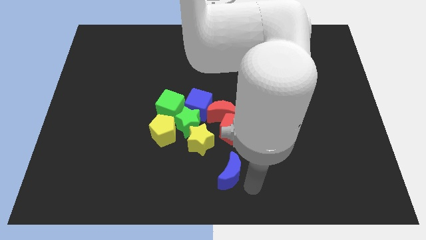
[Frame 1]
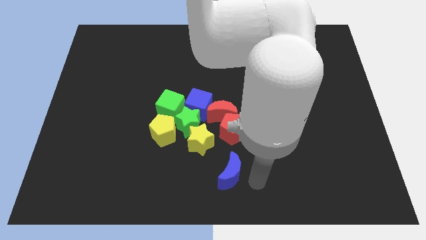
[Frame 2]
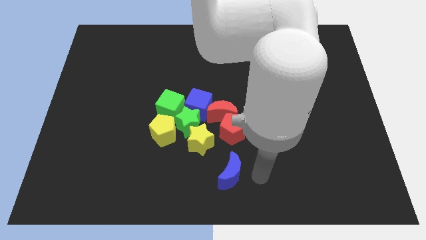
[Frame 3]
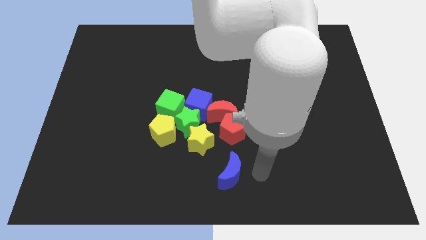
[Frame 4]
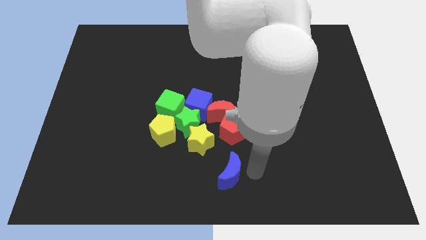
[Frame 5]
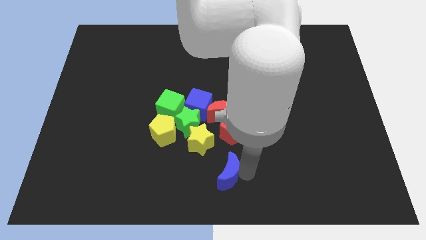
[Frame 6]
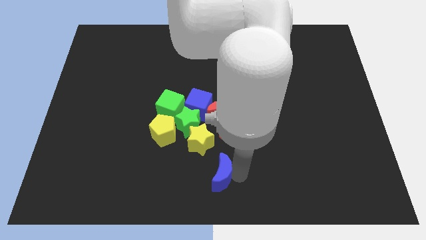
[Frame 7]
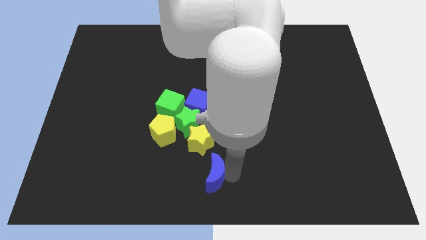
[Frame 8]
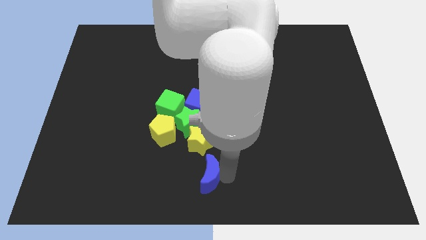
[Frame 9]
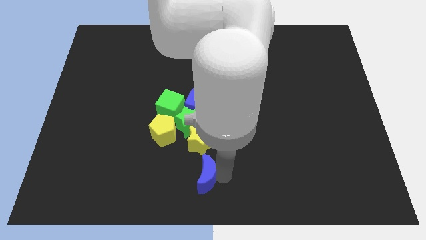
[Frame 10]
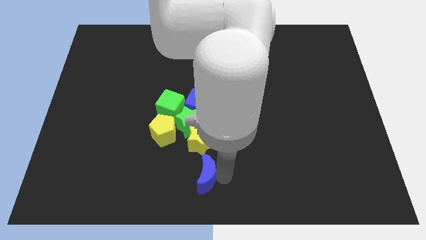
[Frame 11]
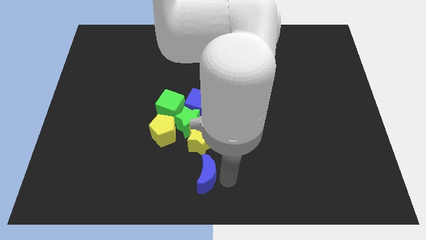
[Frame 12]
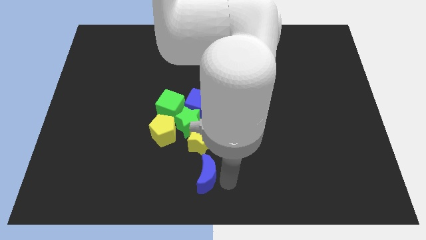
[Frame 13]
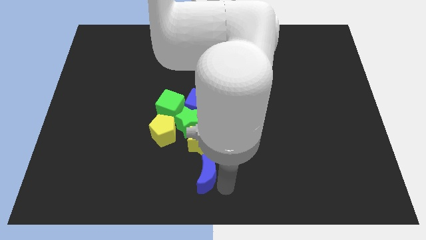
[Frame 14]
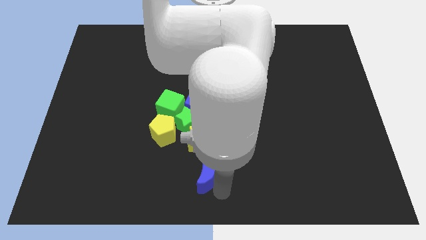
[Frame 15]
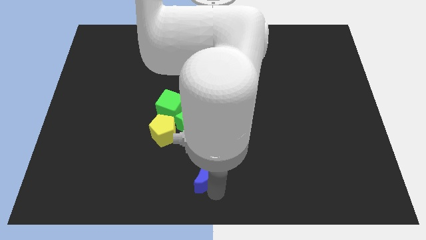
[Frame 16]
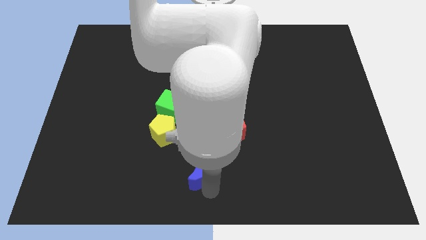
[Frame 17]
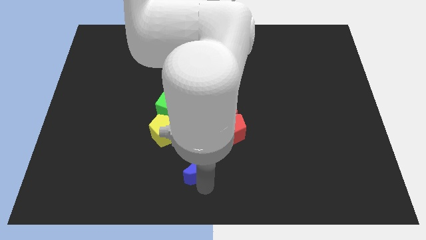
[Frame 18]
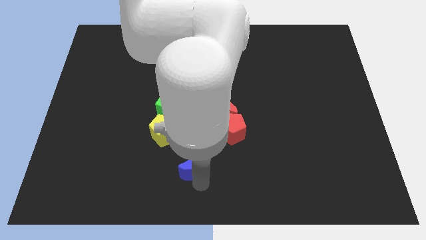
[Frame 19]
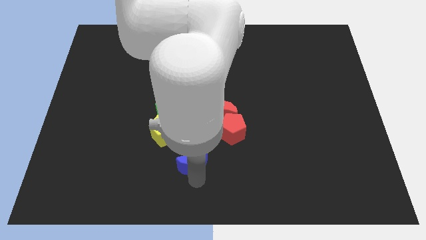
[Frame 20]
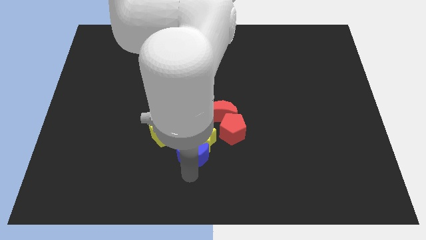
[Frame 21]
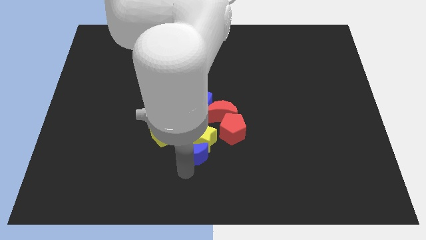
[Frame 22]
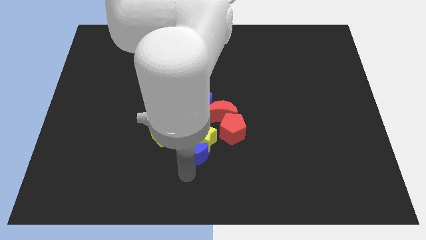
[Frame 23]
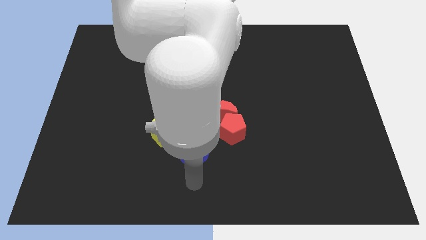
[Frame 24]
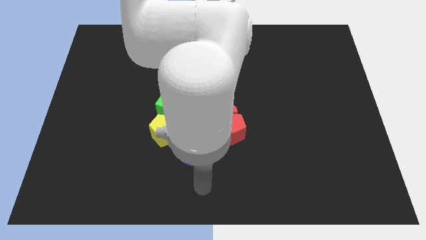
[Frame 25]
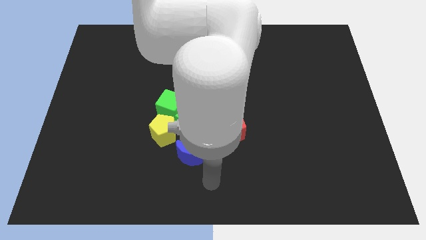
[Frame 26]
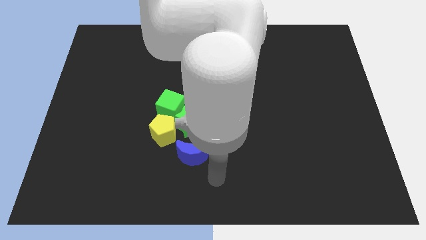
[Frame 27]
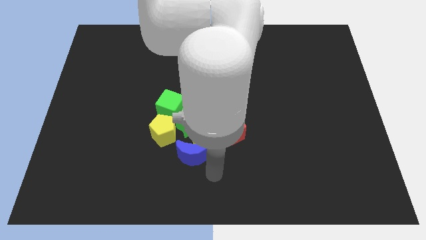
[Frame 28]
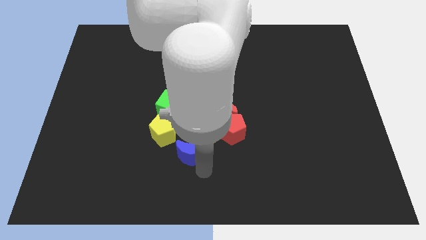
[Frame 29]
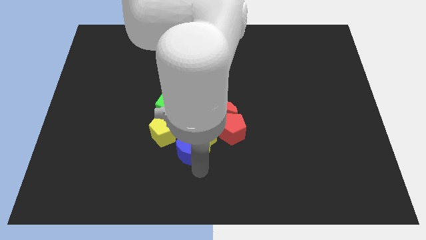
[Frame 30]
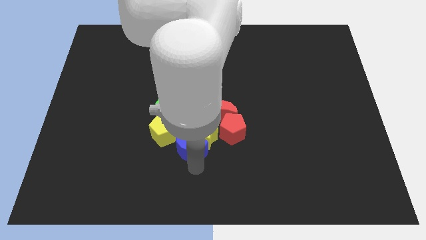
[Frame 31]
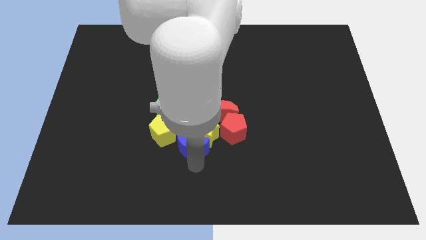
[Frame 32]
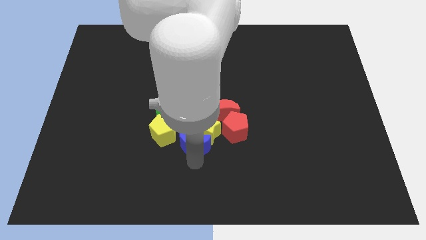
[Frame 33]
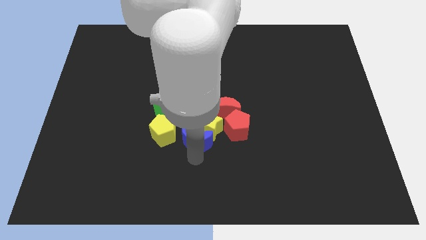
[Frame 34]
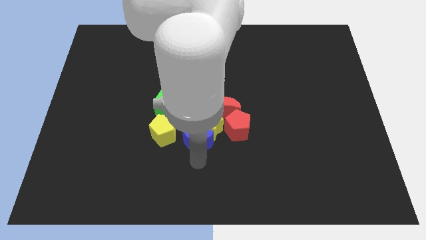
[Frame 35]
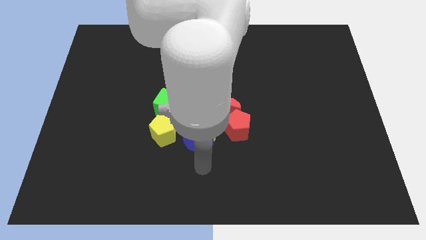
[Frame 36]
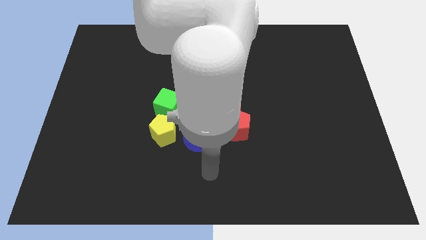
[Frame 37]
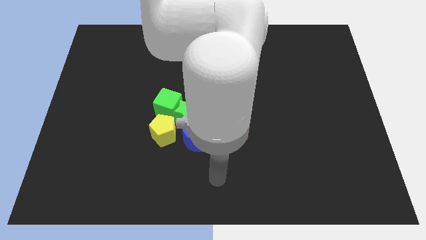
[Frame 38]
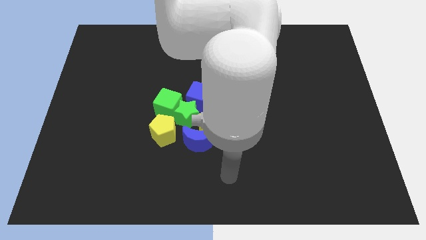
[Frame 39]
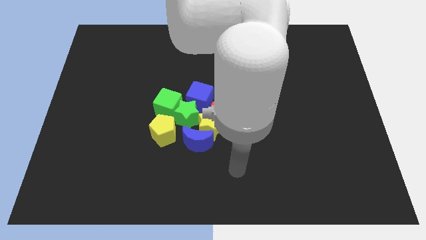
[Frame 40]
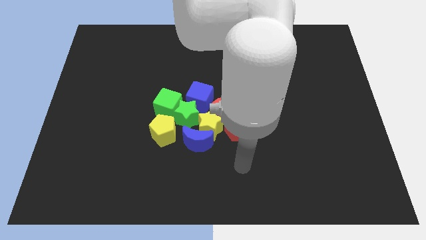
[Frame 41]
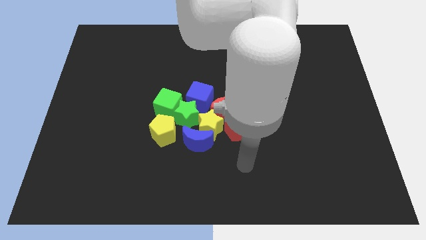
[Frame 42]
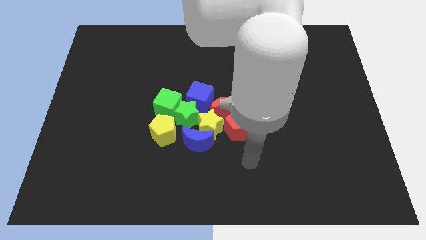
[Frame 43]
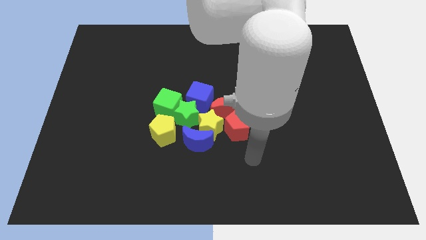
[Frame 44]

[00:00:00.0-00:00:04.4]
push the blue crescent into the group of blocks

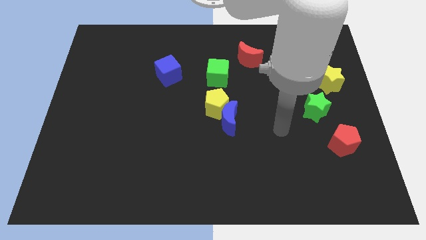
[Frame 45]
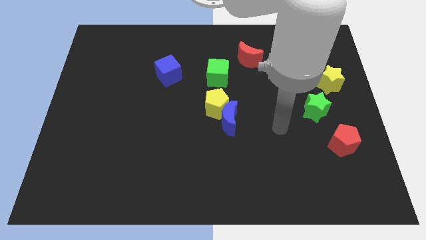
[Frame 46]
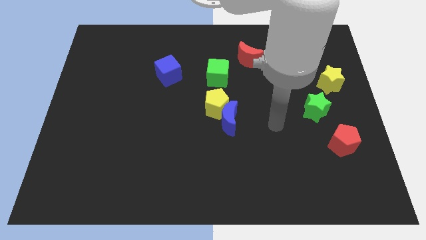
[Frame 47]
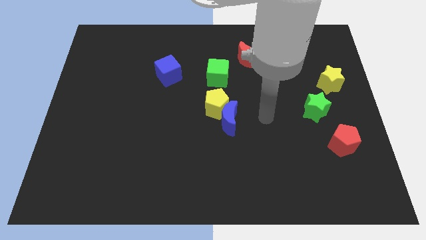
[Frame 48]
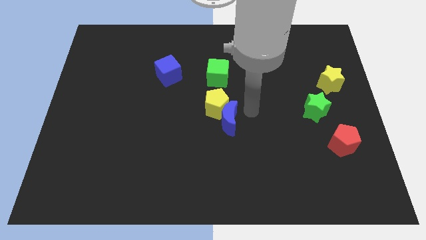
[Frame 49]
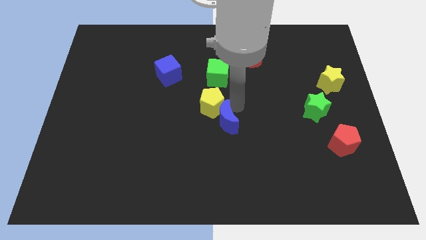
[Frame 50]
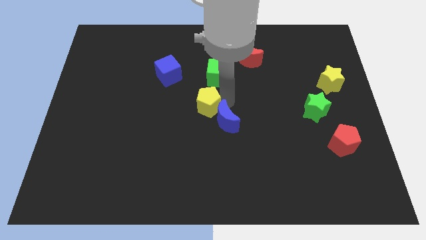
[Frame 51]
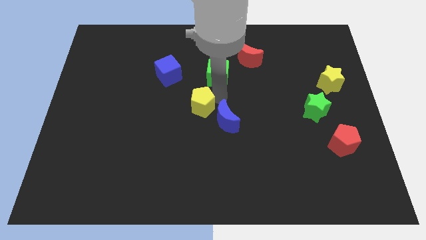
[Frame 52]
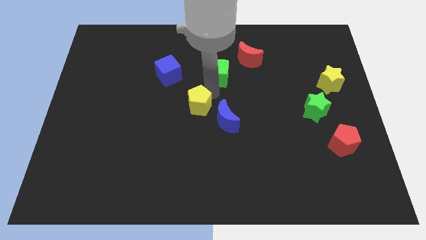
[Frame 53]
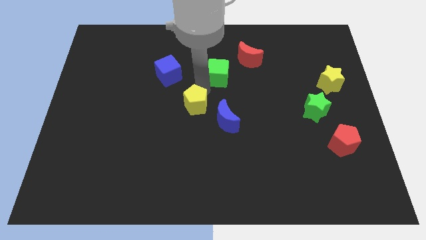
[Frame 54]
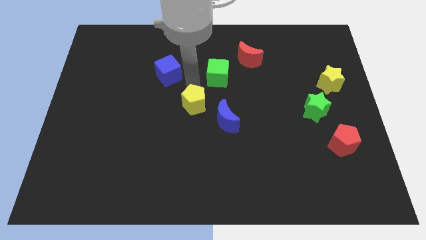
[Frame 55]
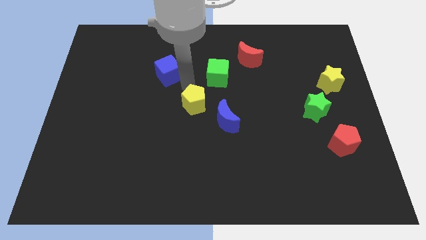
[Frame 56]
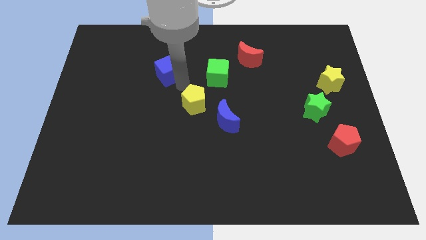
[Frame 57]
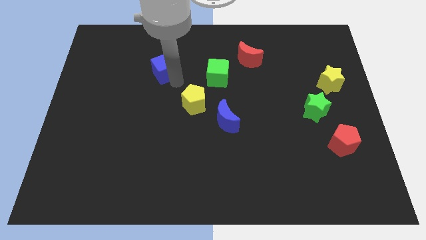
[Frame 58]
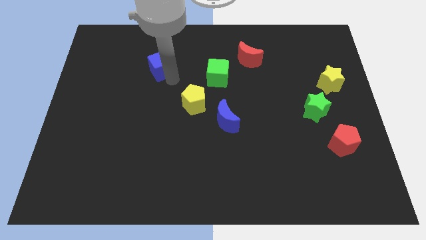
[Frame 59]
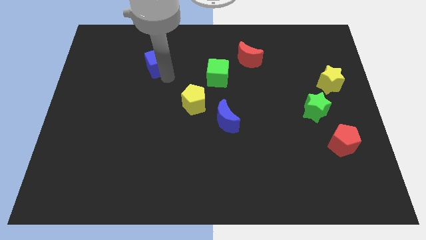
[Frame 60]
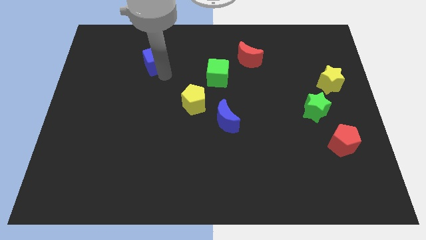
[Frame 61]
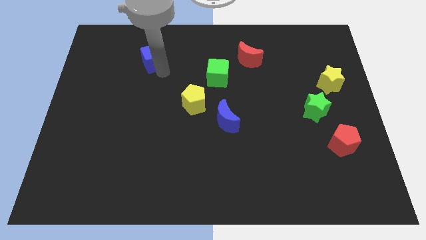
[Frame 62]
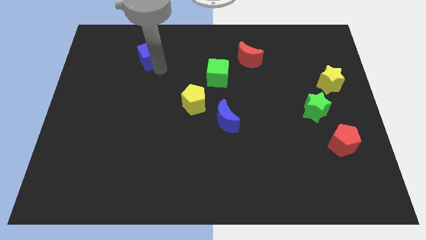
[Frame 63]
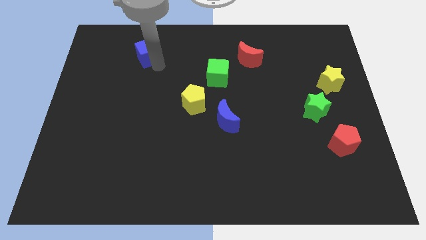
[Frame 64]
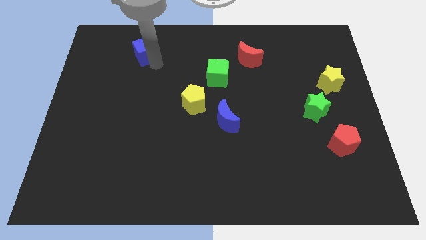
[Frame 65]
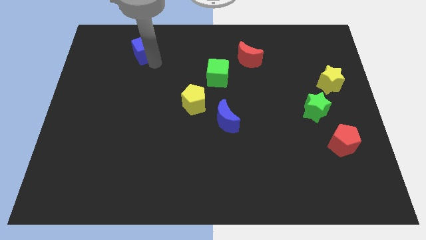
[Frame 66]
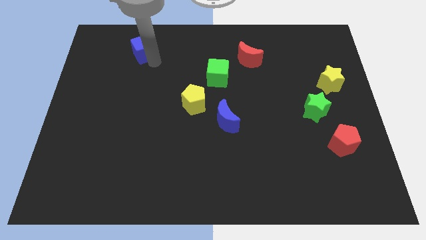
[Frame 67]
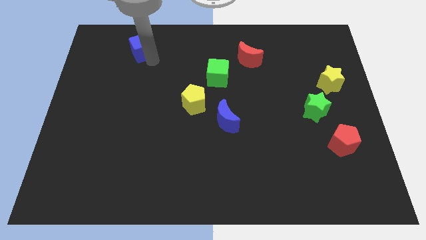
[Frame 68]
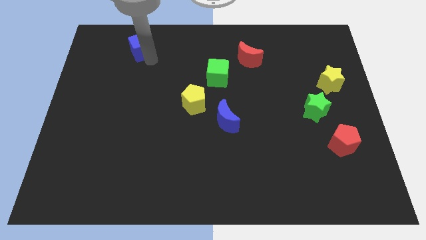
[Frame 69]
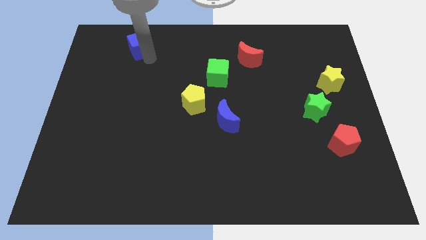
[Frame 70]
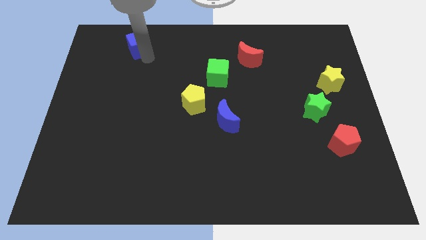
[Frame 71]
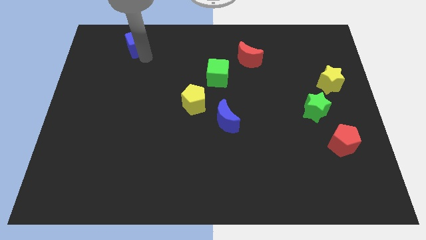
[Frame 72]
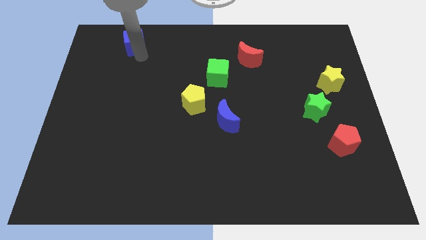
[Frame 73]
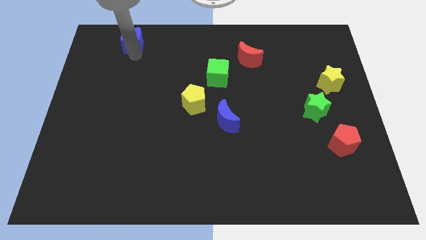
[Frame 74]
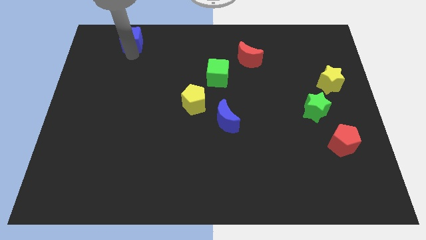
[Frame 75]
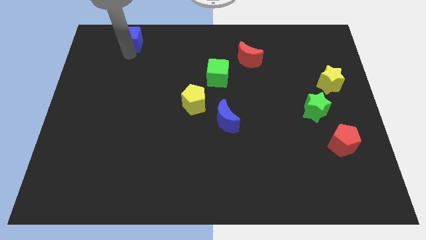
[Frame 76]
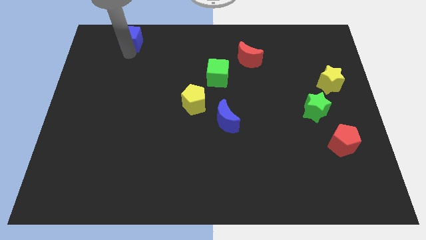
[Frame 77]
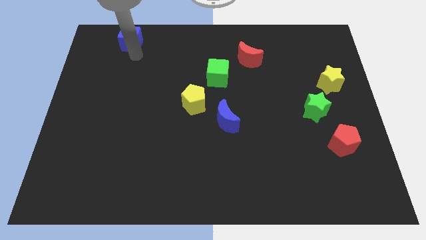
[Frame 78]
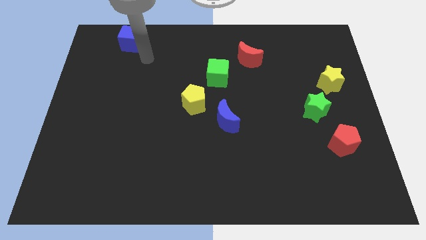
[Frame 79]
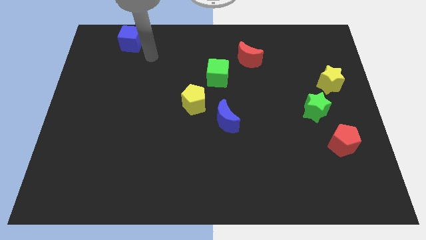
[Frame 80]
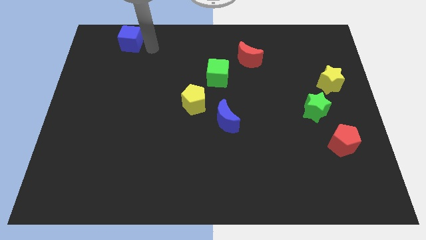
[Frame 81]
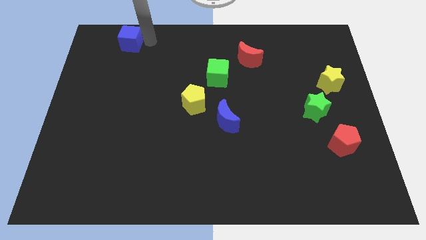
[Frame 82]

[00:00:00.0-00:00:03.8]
place the blue cube at the top

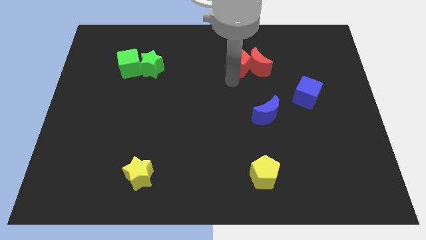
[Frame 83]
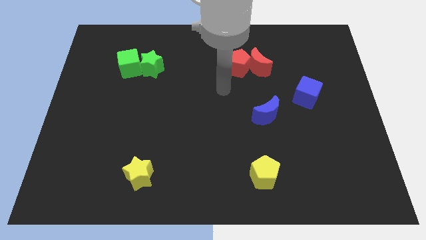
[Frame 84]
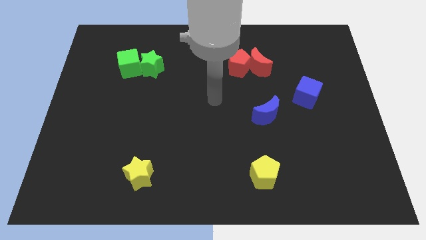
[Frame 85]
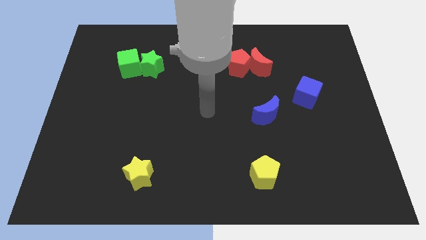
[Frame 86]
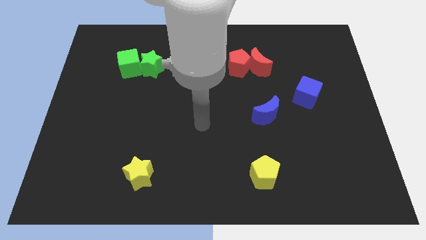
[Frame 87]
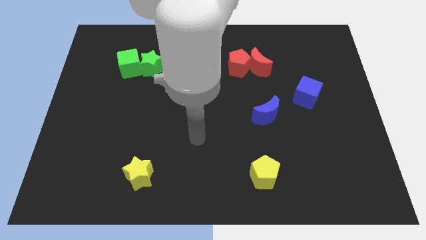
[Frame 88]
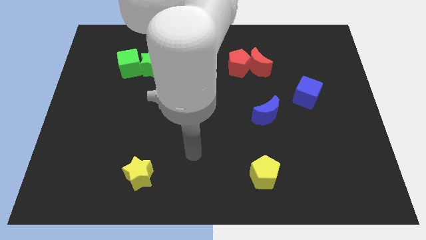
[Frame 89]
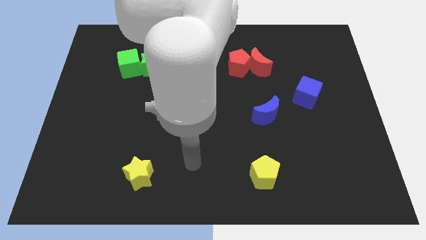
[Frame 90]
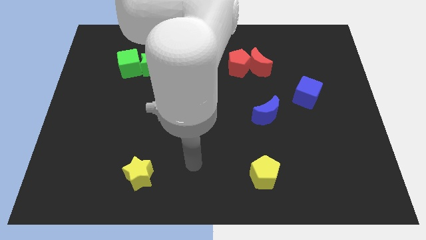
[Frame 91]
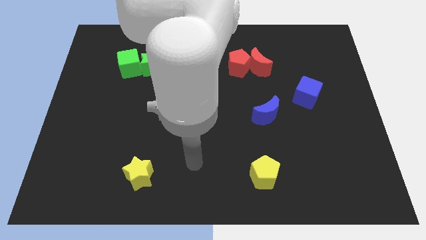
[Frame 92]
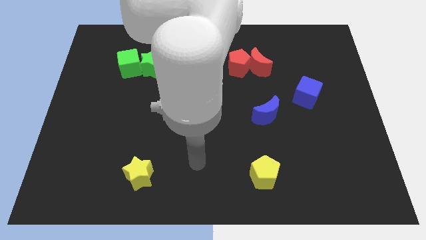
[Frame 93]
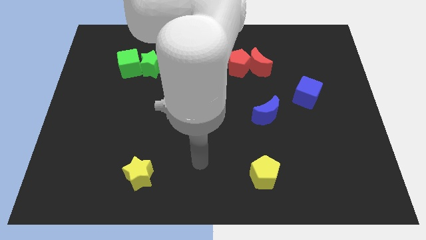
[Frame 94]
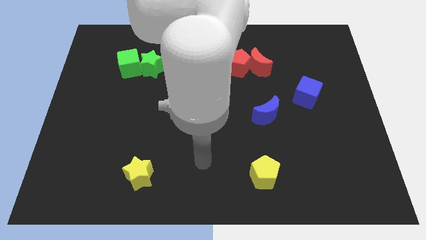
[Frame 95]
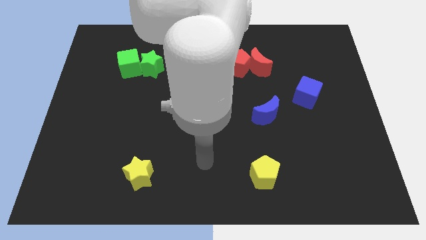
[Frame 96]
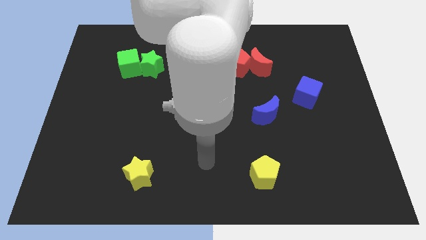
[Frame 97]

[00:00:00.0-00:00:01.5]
move your arm towards the bottom center of the board
